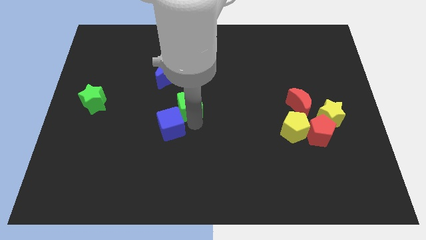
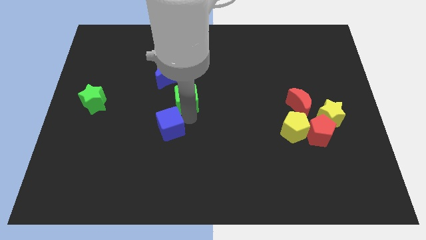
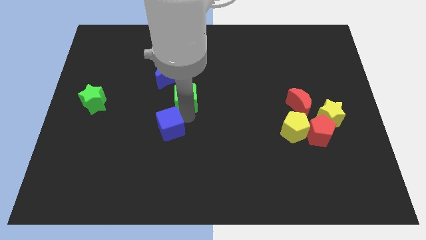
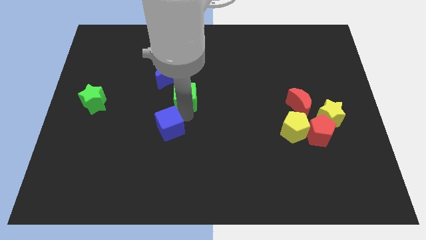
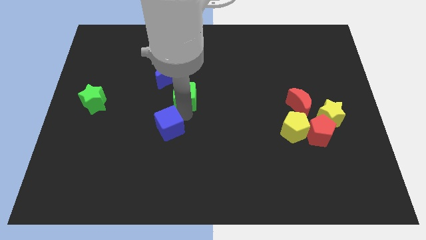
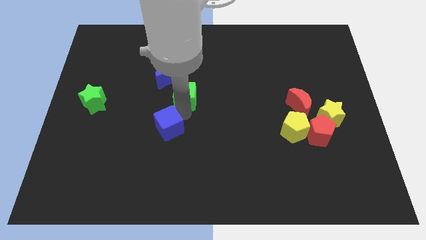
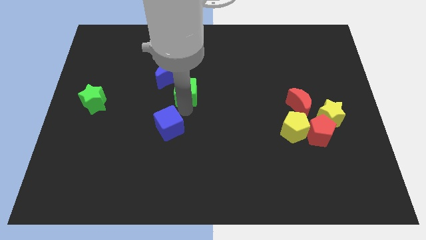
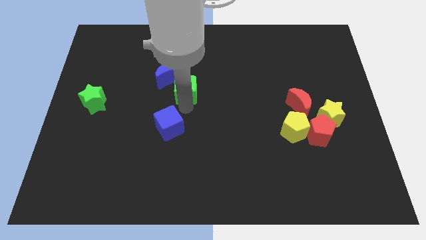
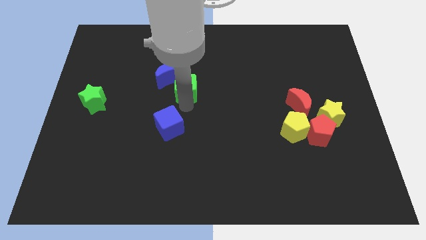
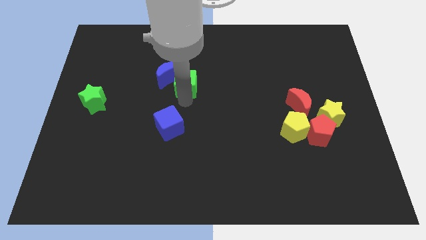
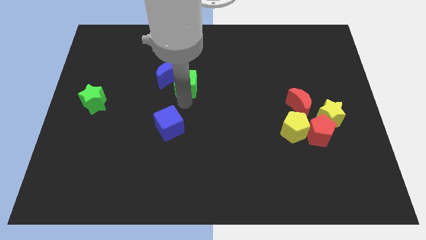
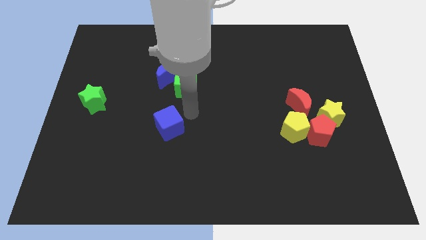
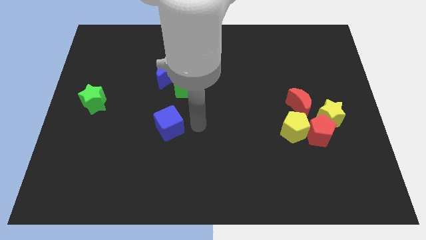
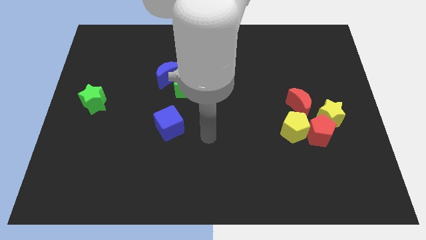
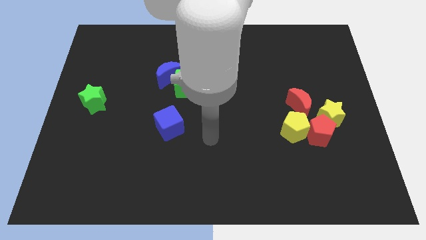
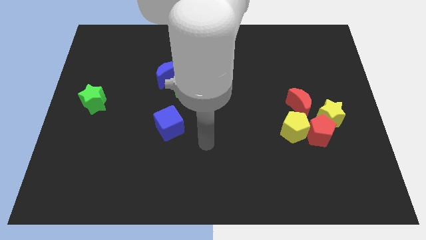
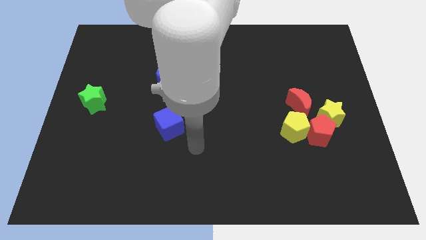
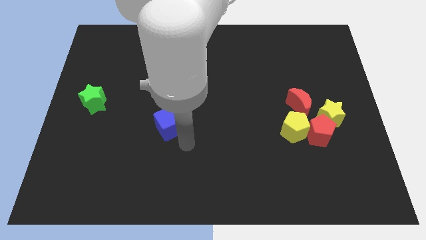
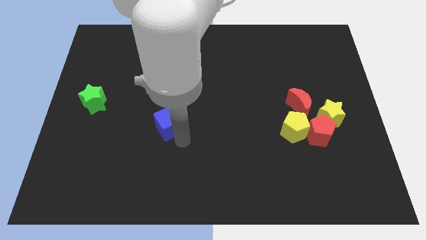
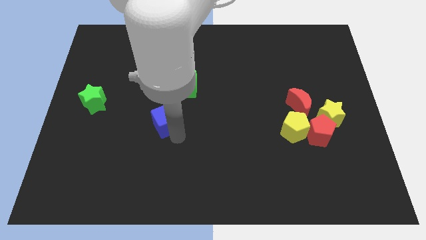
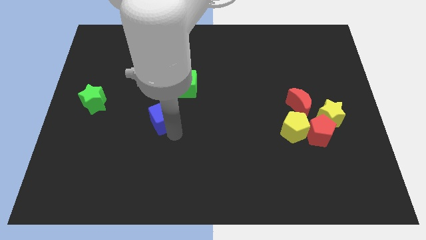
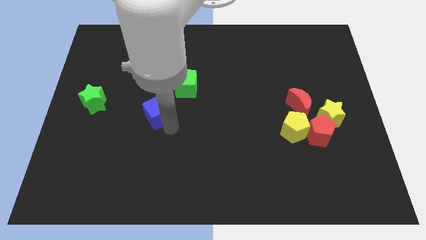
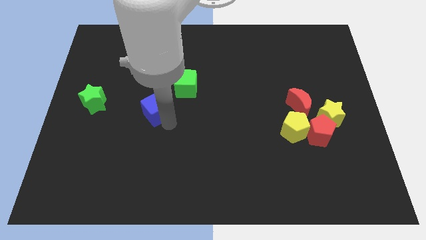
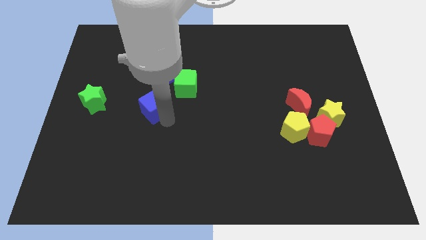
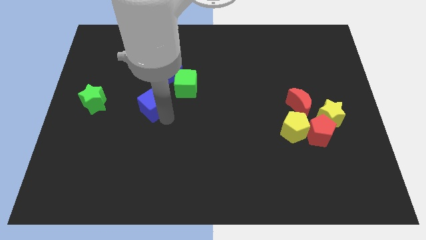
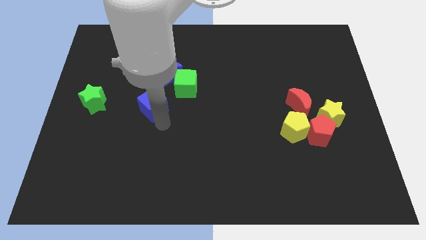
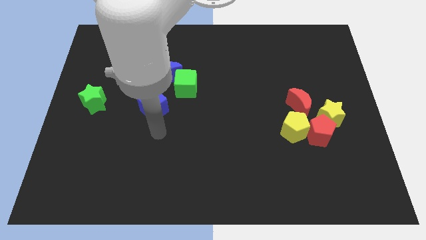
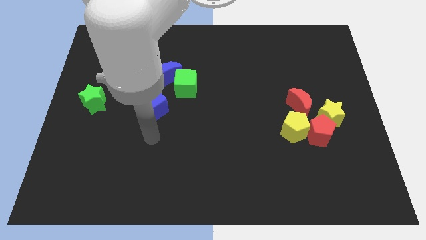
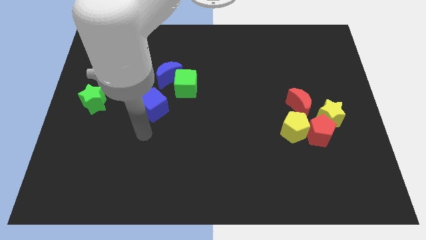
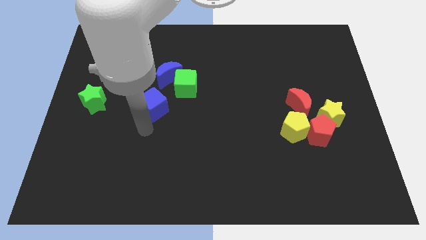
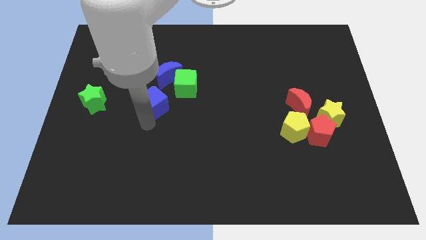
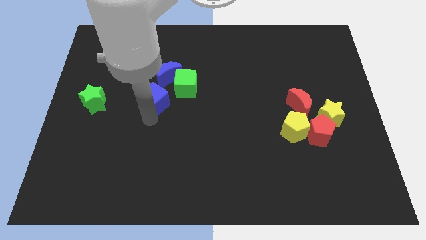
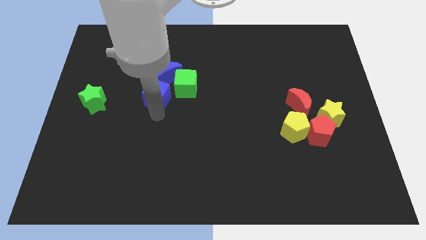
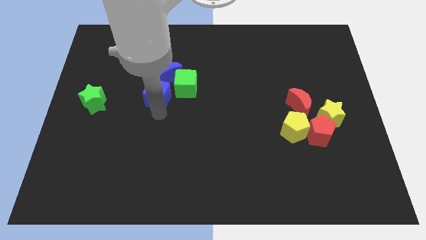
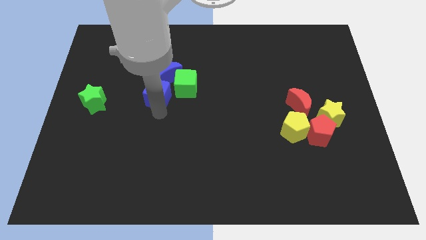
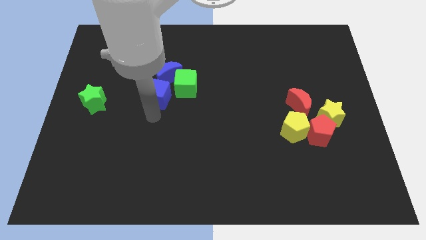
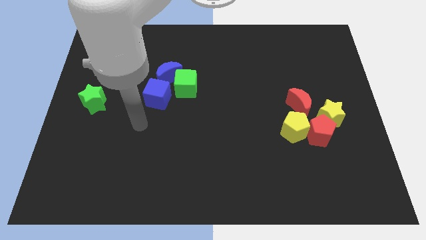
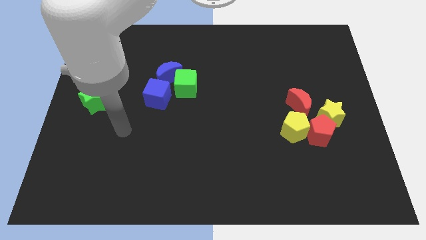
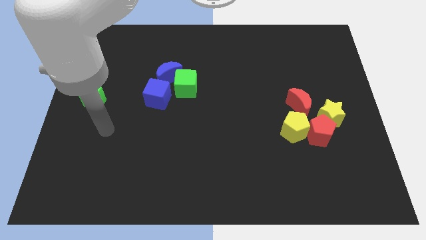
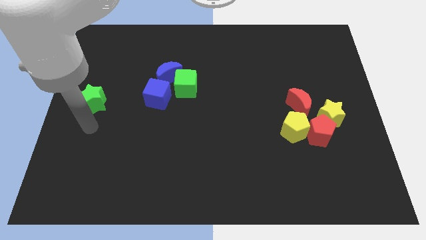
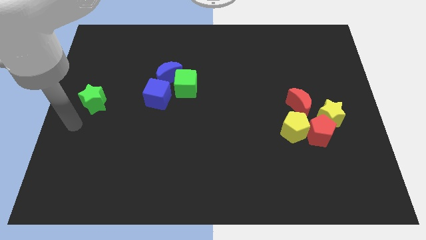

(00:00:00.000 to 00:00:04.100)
move the blue cube at the bottom of the blue crescent

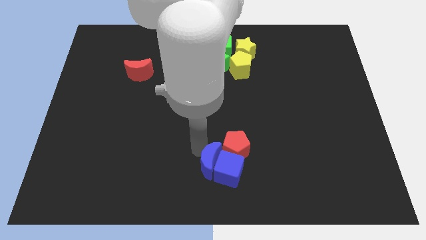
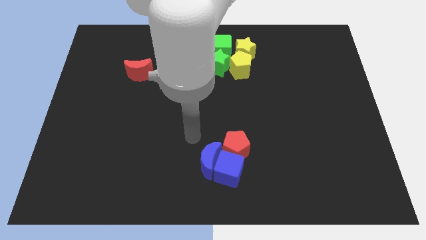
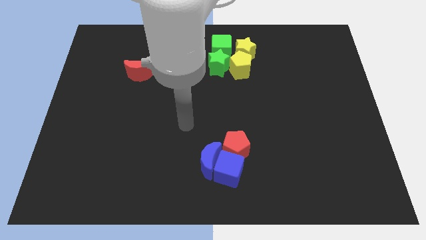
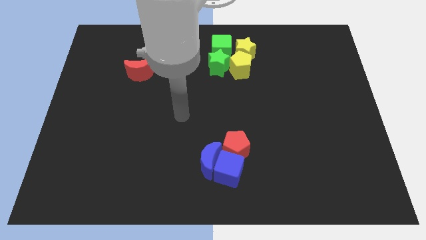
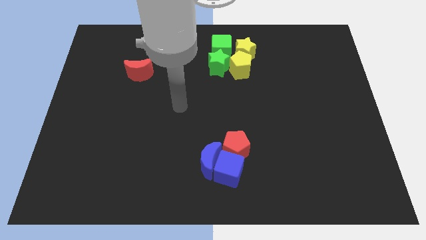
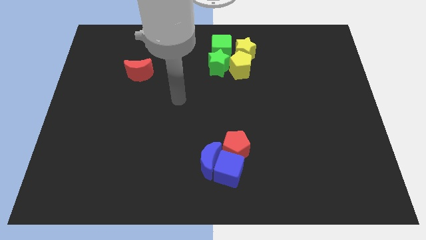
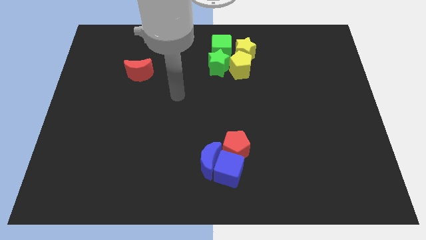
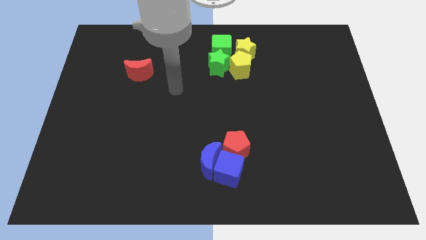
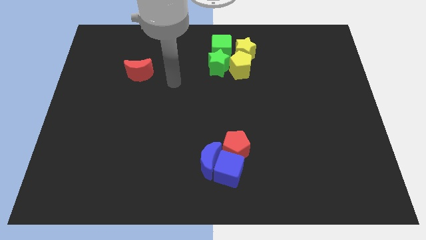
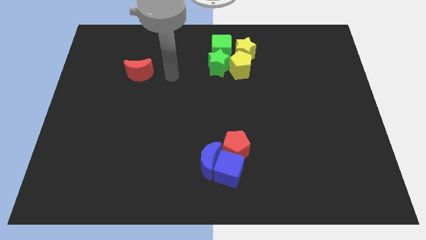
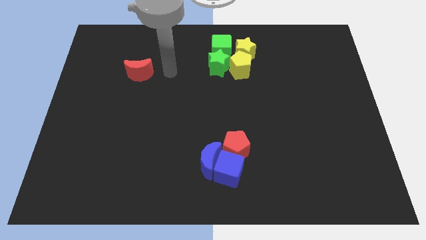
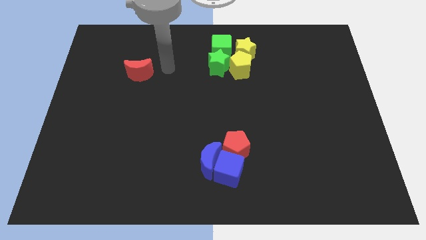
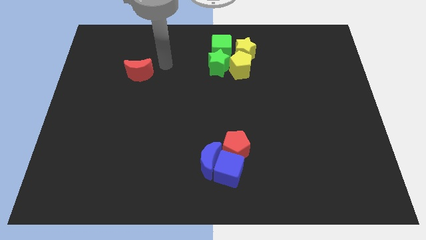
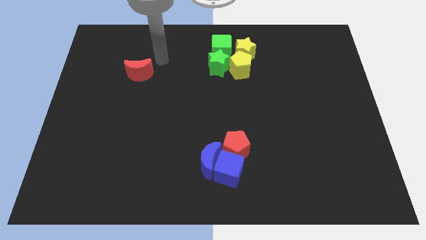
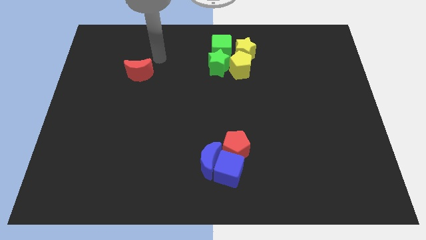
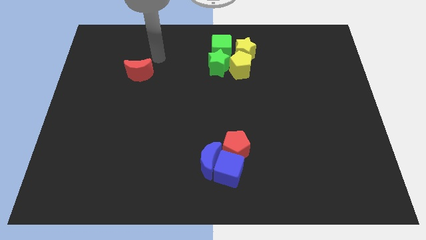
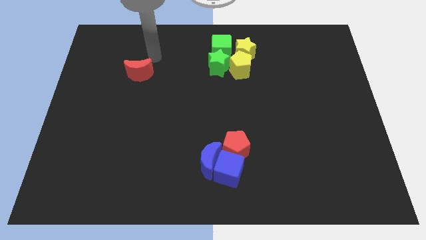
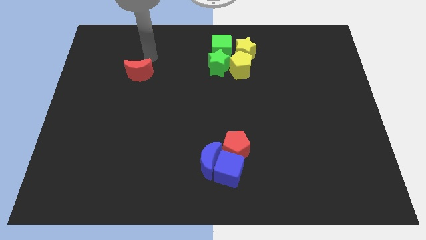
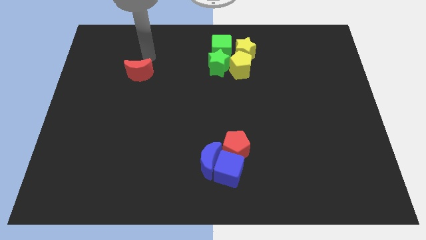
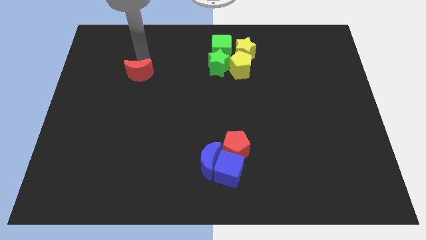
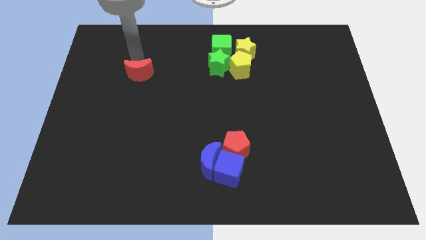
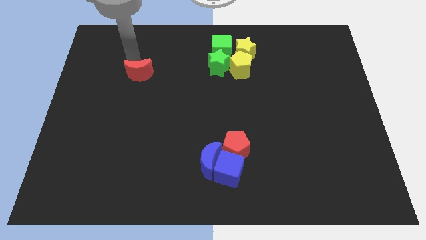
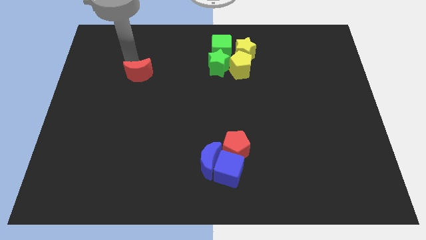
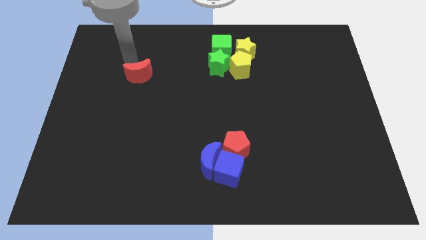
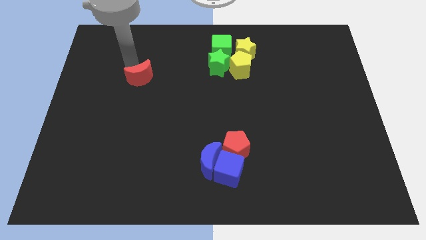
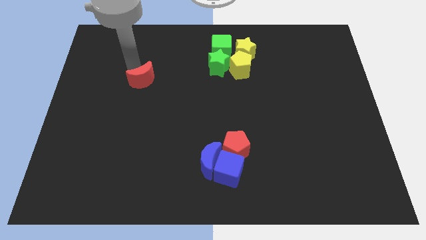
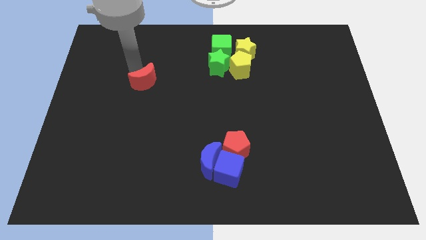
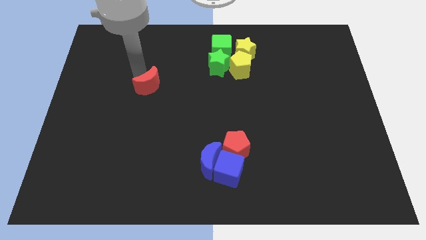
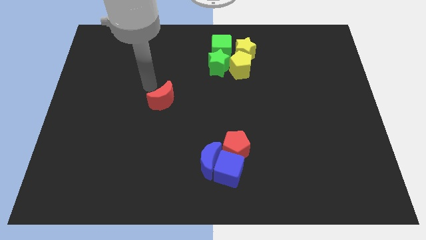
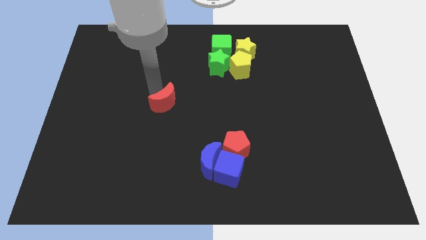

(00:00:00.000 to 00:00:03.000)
push the red moon into the center

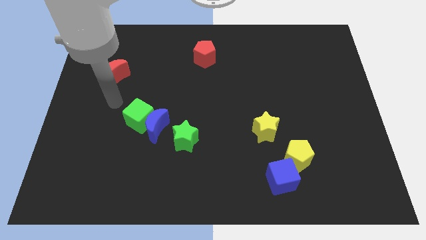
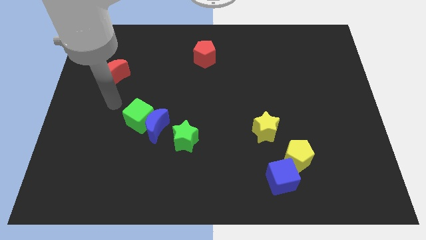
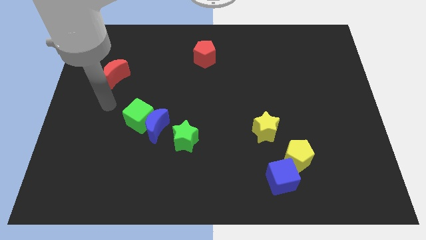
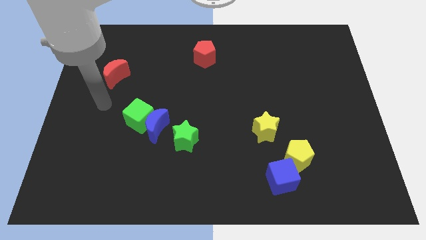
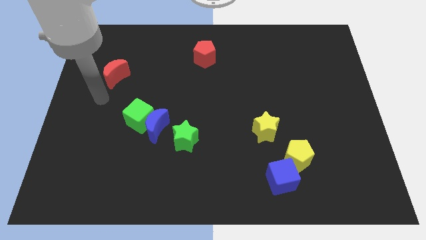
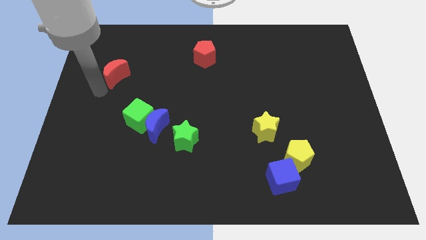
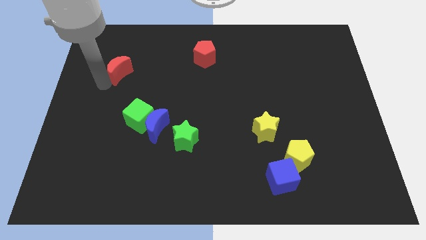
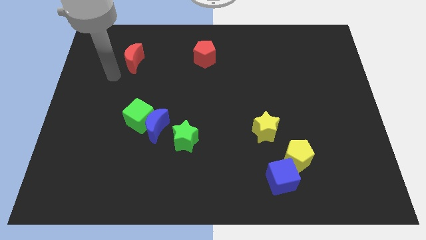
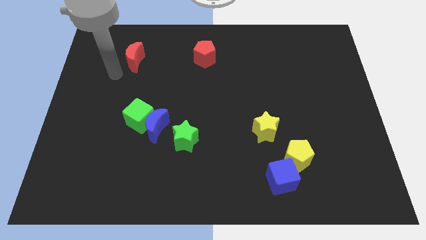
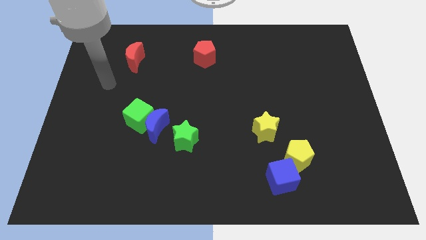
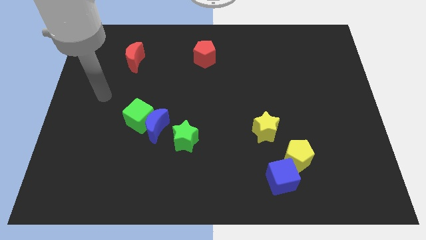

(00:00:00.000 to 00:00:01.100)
place the red crescent at the left of the red pentagon

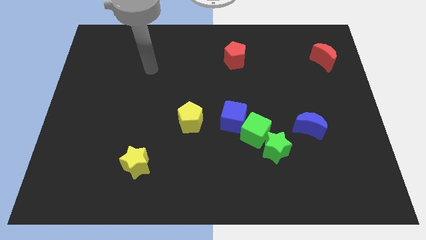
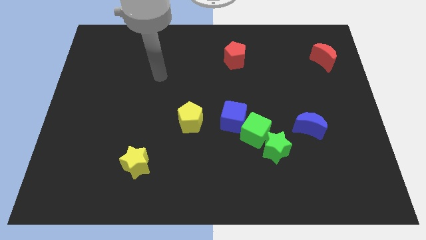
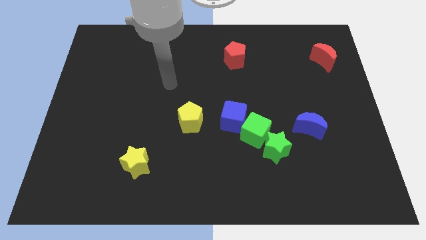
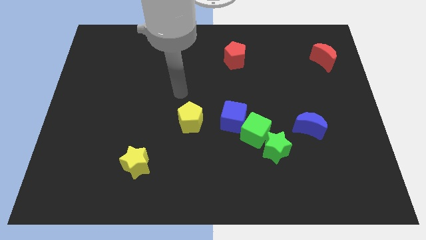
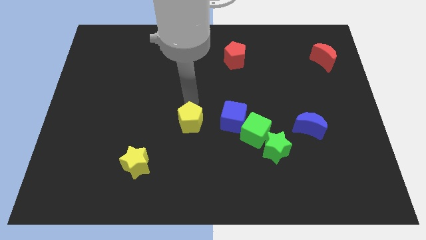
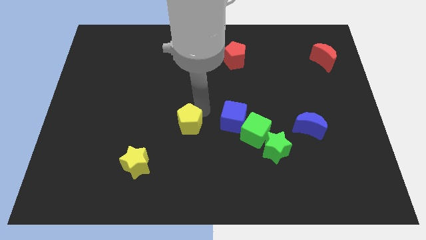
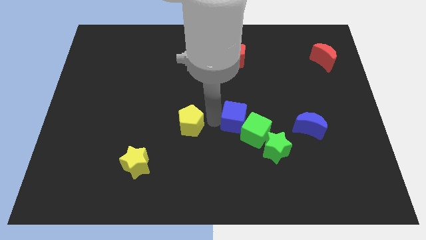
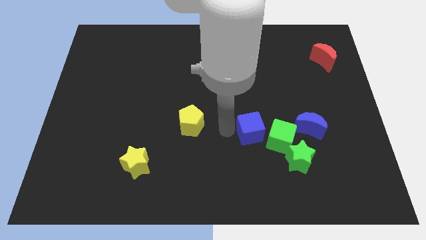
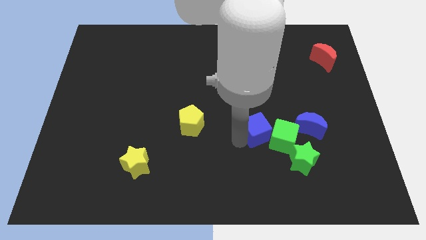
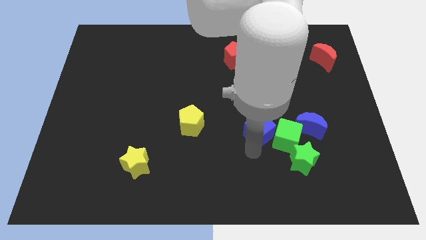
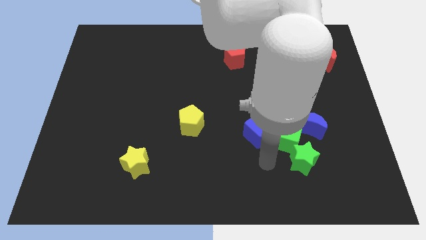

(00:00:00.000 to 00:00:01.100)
push the blue cube into the green cube
